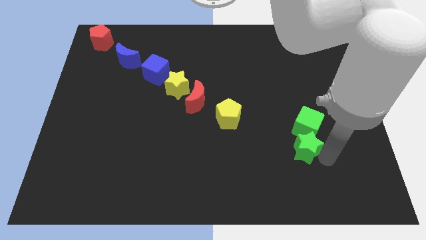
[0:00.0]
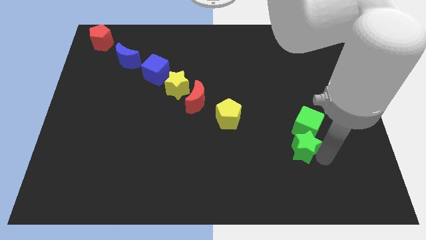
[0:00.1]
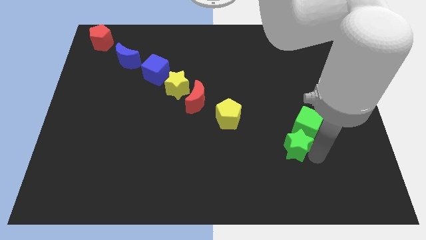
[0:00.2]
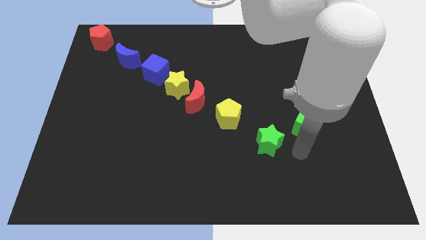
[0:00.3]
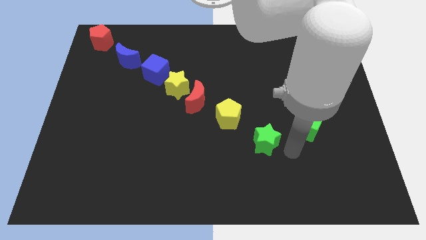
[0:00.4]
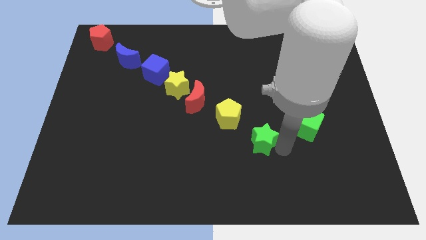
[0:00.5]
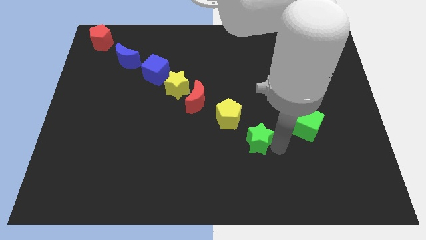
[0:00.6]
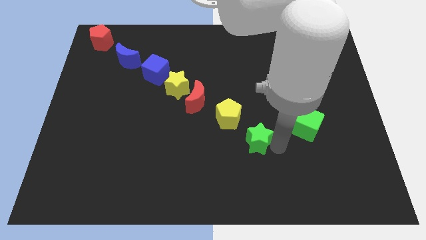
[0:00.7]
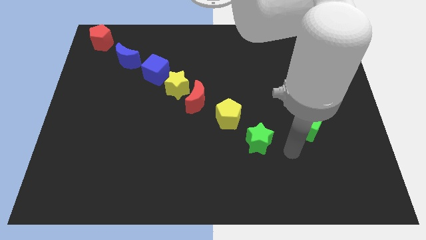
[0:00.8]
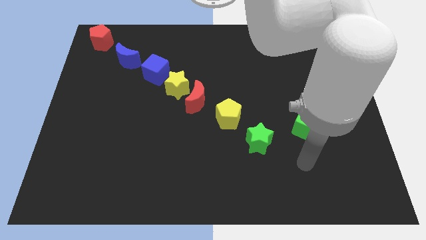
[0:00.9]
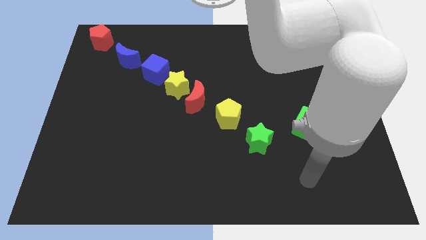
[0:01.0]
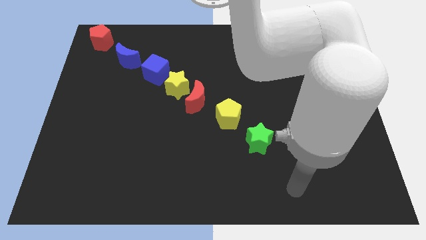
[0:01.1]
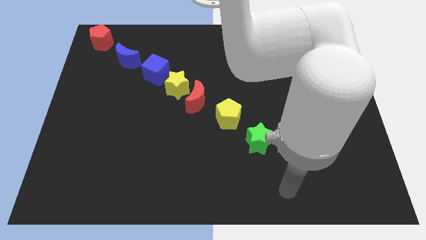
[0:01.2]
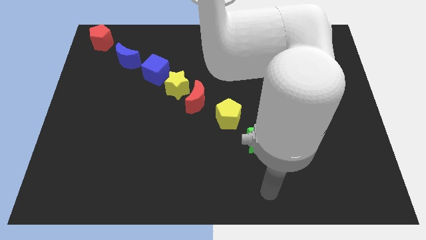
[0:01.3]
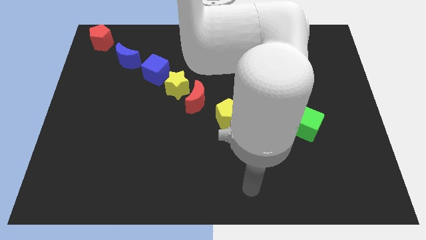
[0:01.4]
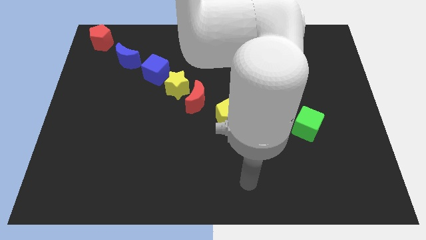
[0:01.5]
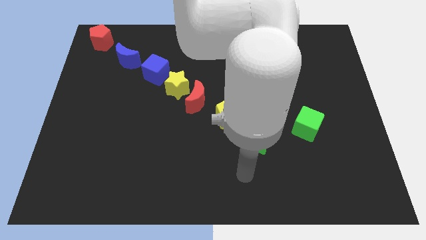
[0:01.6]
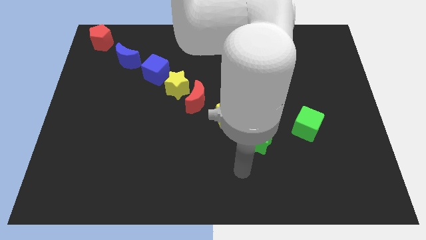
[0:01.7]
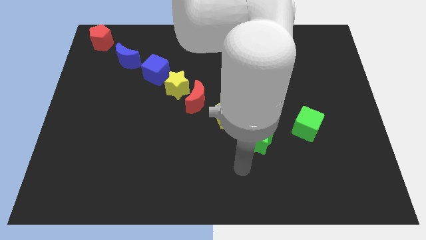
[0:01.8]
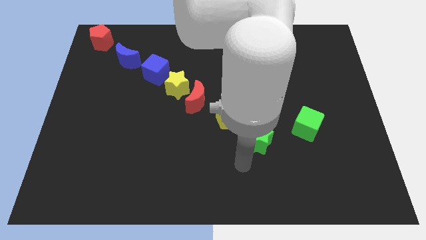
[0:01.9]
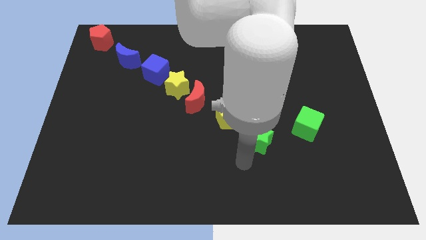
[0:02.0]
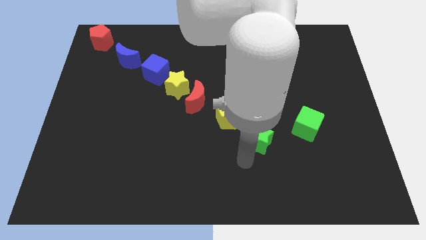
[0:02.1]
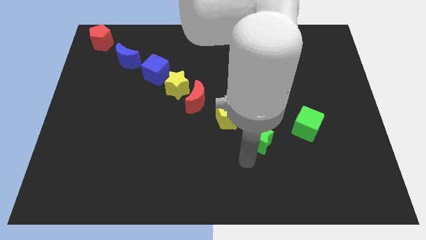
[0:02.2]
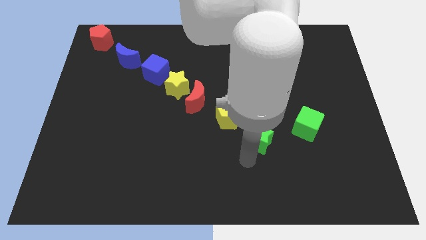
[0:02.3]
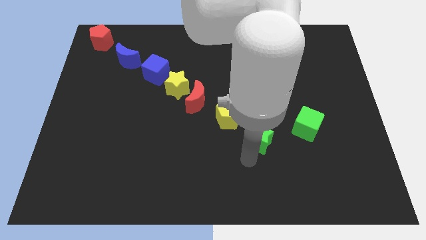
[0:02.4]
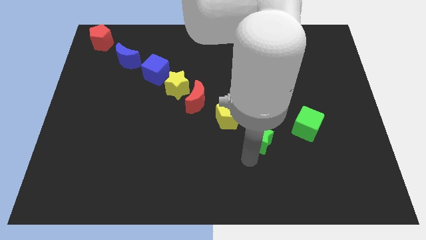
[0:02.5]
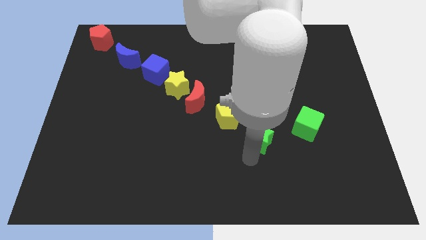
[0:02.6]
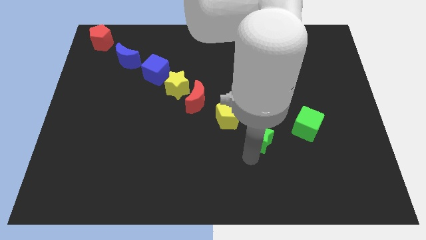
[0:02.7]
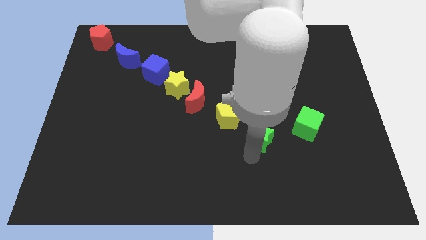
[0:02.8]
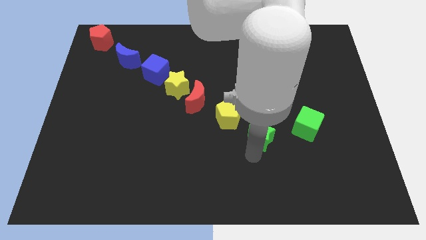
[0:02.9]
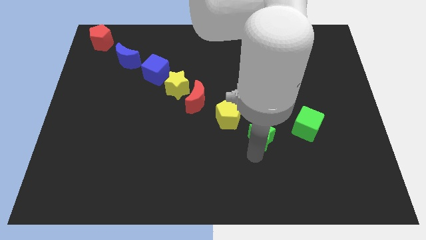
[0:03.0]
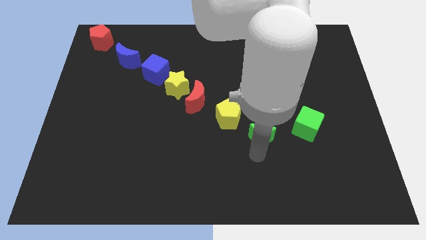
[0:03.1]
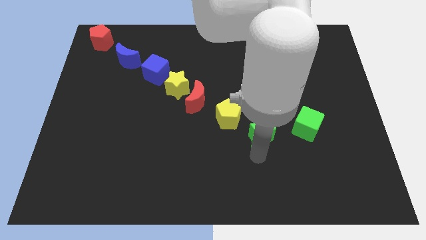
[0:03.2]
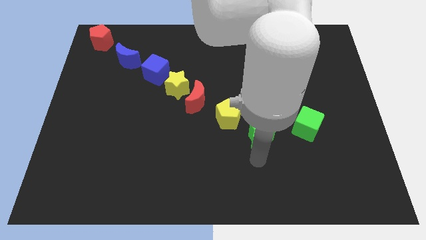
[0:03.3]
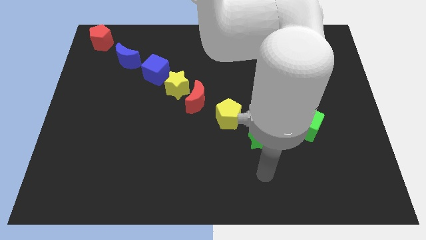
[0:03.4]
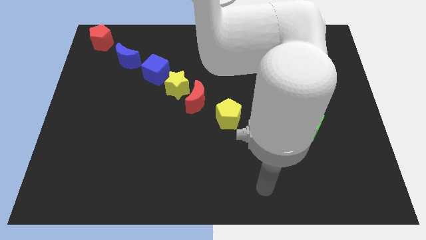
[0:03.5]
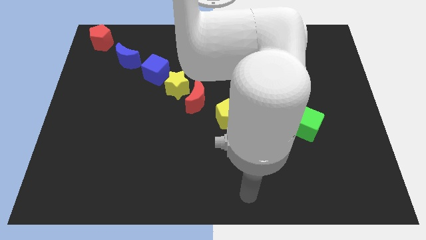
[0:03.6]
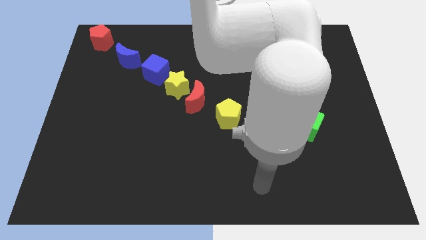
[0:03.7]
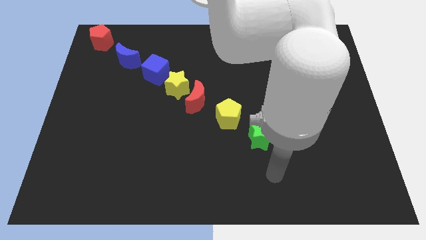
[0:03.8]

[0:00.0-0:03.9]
place the green star in between the green cube and yellow pentagon

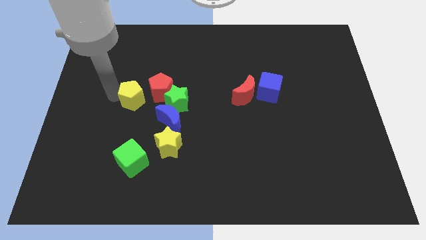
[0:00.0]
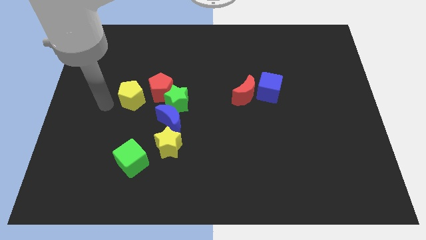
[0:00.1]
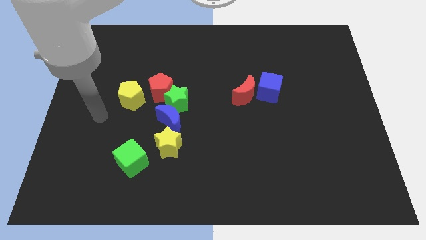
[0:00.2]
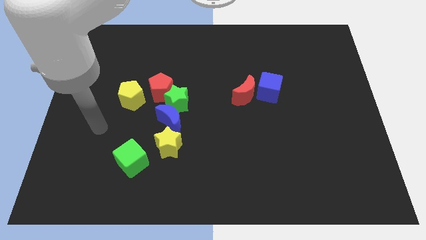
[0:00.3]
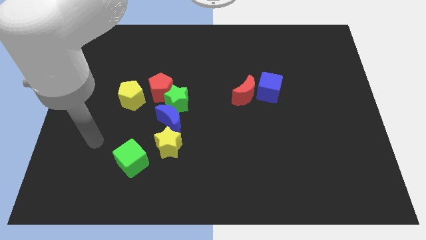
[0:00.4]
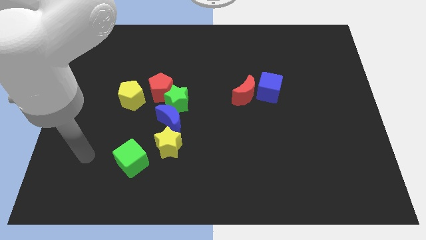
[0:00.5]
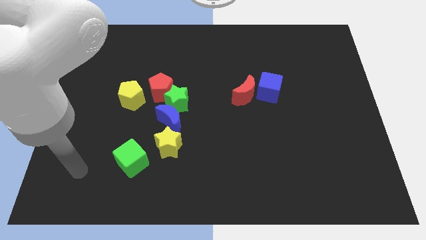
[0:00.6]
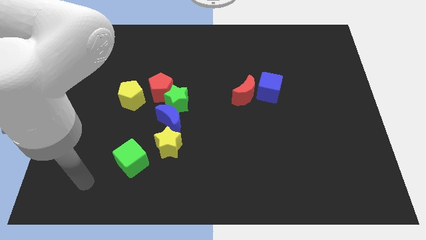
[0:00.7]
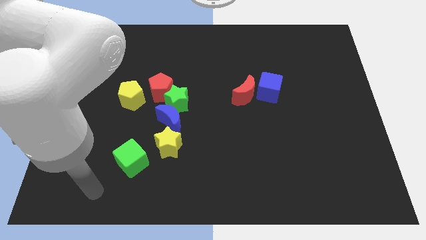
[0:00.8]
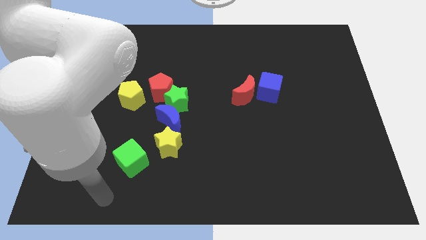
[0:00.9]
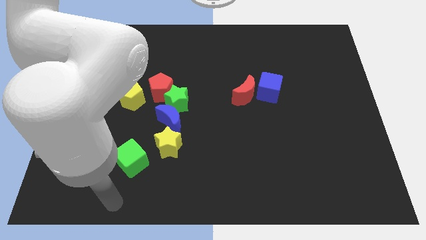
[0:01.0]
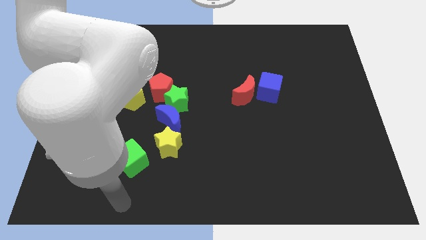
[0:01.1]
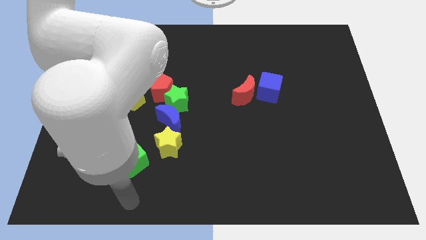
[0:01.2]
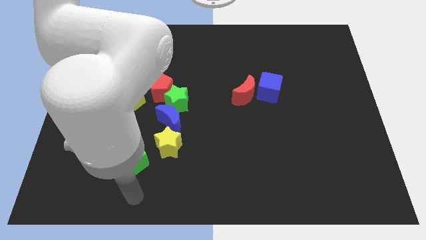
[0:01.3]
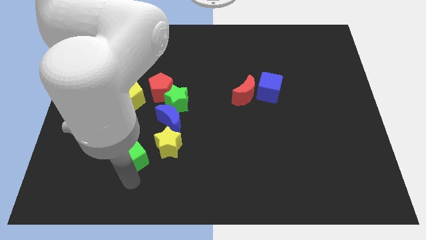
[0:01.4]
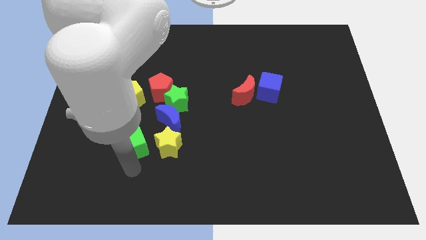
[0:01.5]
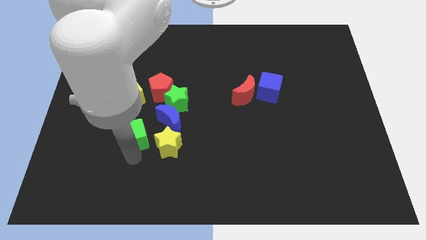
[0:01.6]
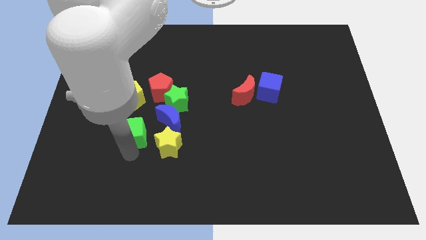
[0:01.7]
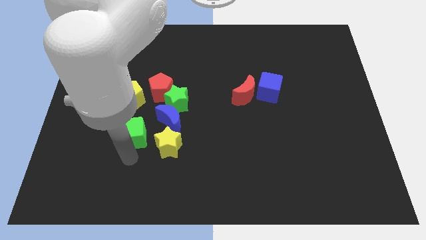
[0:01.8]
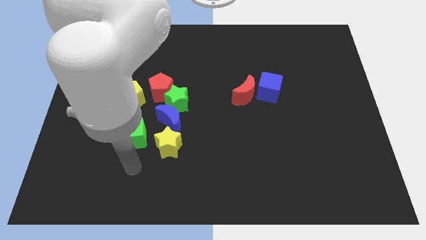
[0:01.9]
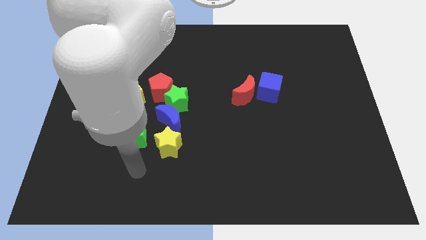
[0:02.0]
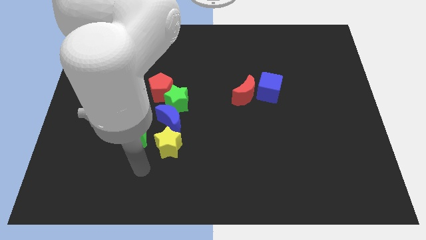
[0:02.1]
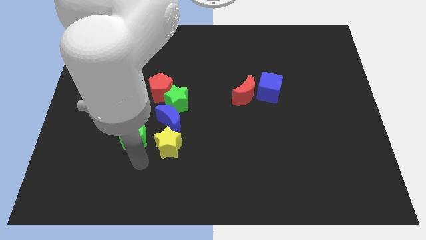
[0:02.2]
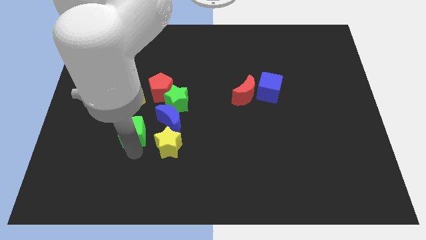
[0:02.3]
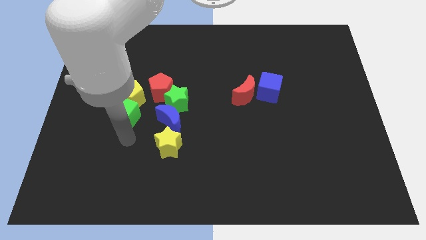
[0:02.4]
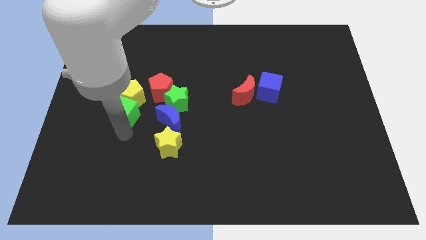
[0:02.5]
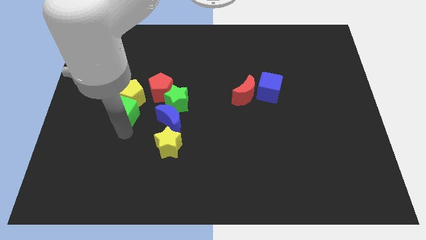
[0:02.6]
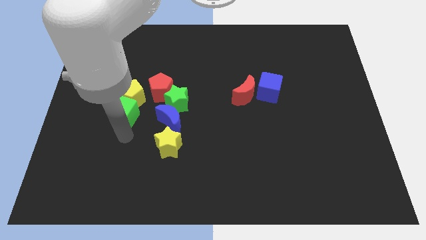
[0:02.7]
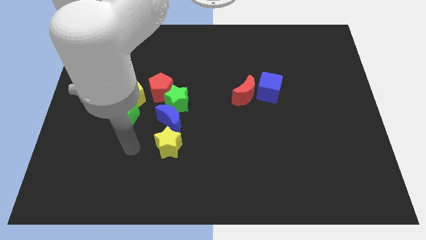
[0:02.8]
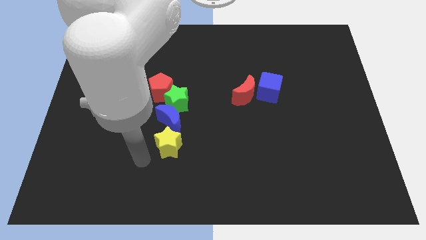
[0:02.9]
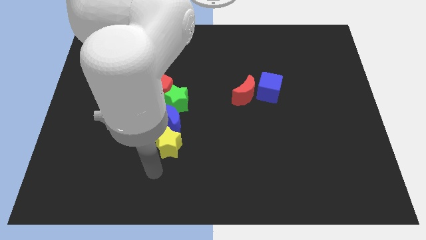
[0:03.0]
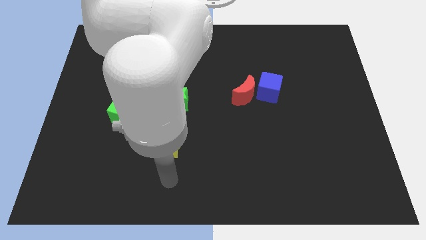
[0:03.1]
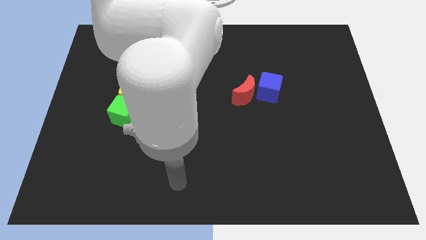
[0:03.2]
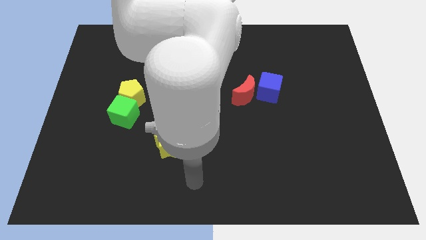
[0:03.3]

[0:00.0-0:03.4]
place the green cube at the bottom side of the yellow pentagon

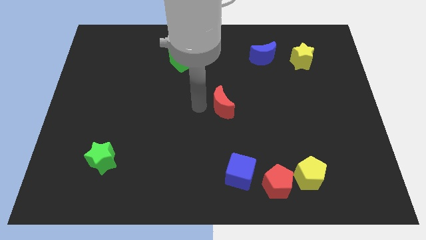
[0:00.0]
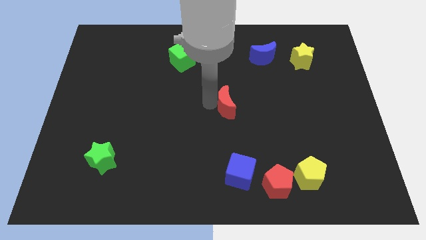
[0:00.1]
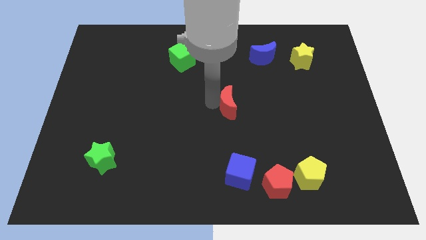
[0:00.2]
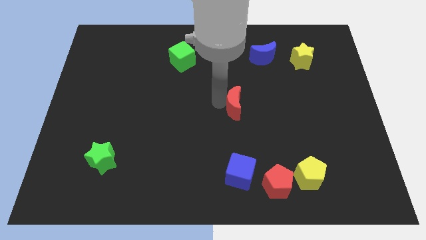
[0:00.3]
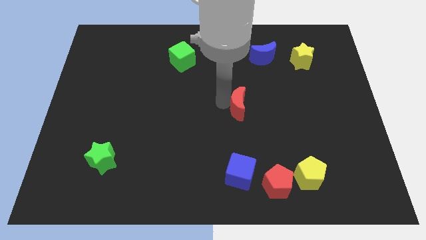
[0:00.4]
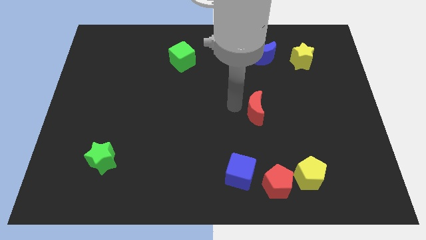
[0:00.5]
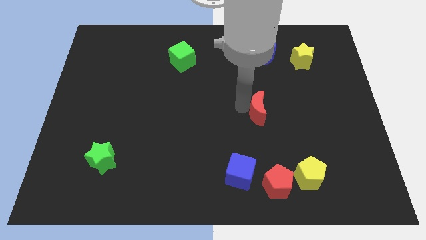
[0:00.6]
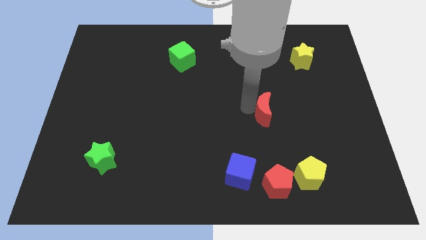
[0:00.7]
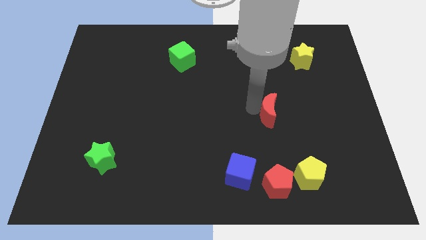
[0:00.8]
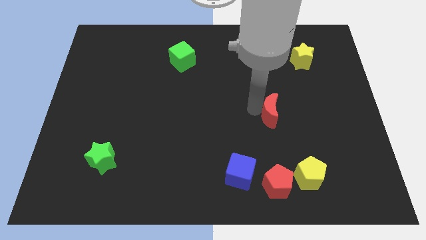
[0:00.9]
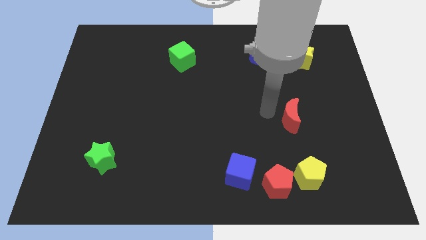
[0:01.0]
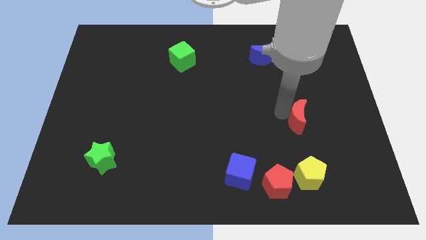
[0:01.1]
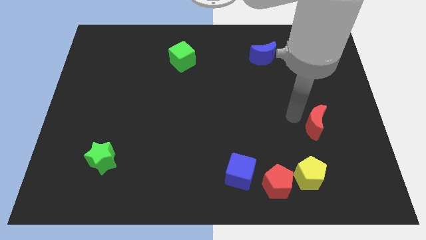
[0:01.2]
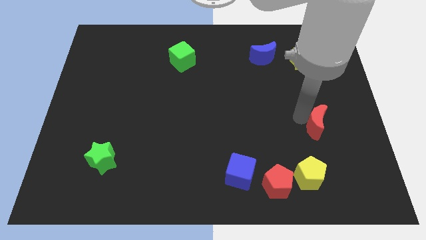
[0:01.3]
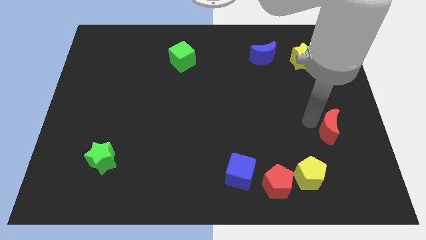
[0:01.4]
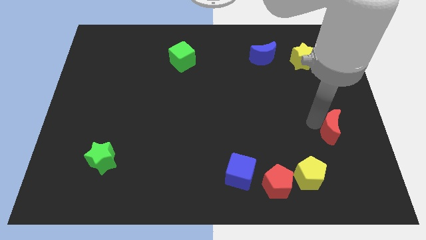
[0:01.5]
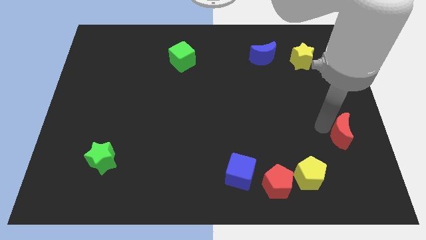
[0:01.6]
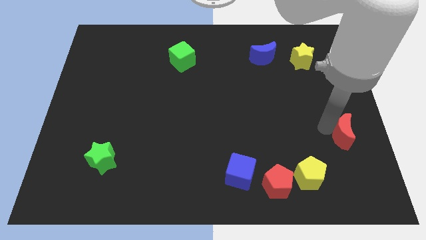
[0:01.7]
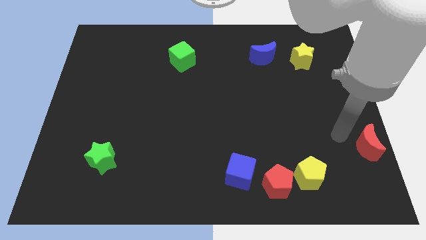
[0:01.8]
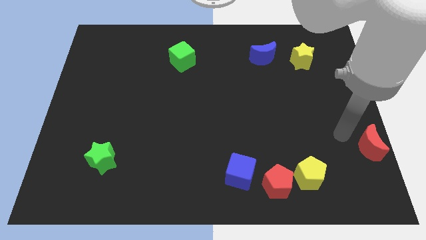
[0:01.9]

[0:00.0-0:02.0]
push the red moon towards the left side of the board
